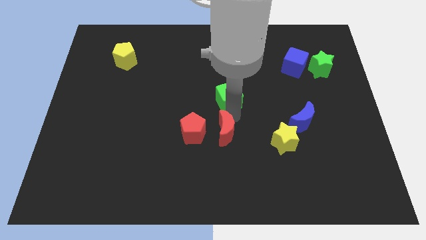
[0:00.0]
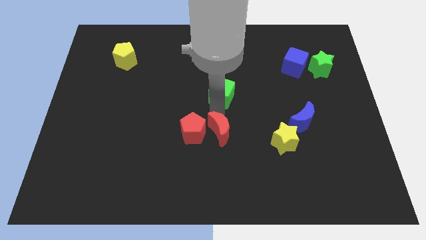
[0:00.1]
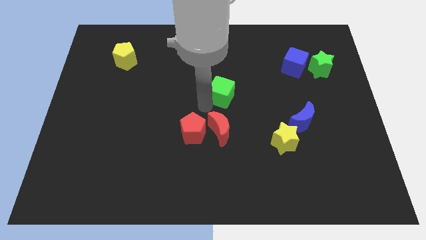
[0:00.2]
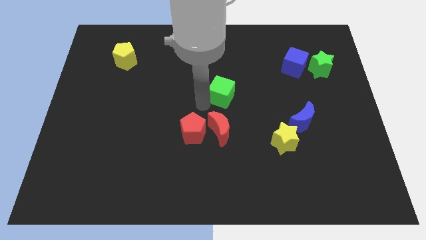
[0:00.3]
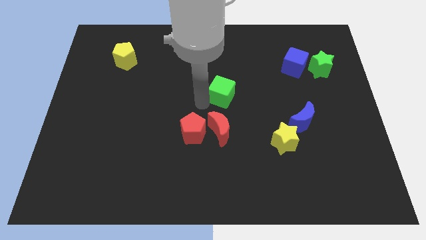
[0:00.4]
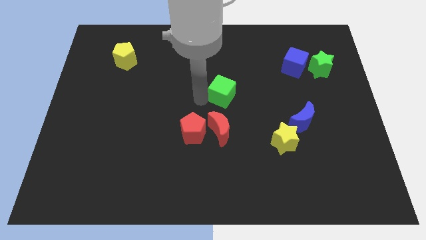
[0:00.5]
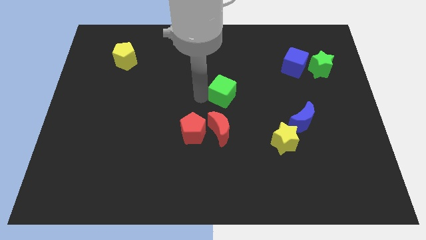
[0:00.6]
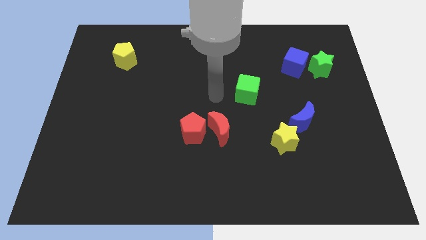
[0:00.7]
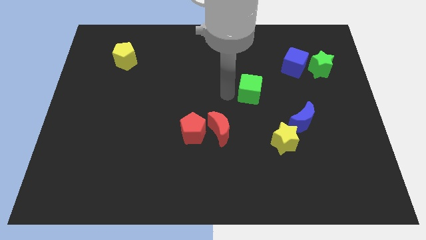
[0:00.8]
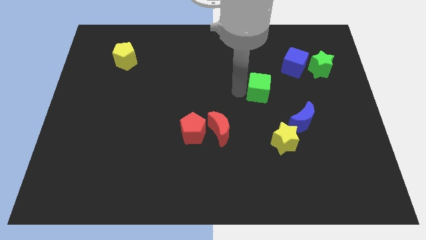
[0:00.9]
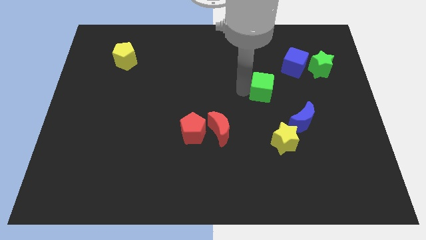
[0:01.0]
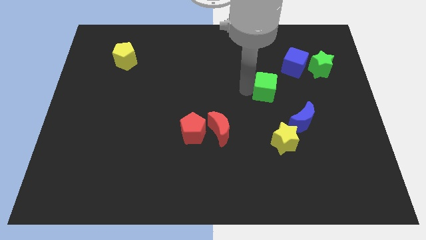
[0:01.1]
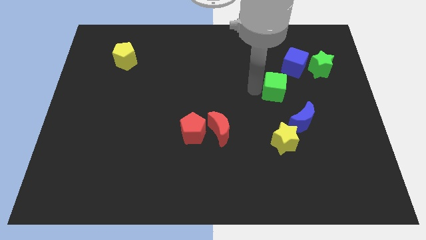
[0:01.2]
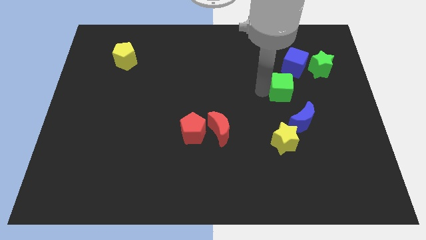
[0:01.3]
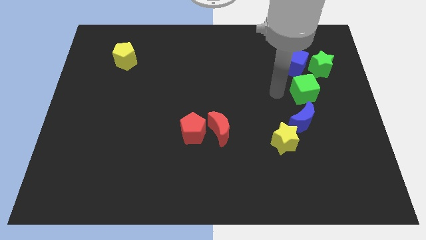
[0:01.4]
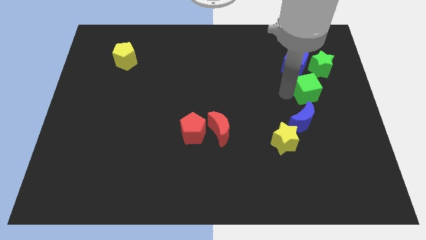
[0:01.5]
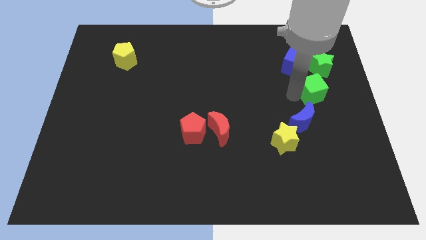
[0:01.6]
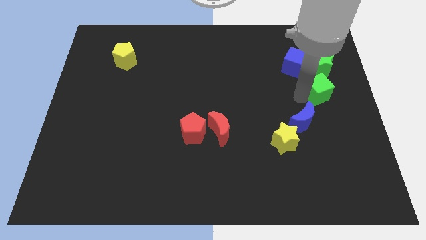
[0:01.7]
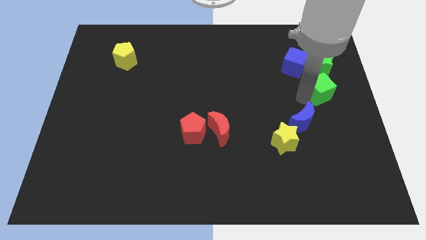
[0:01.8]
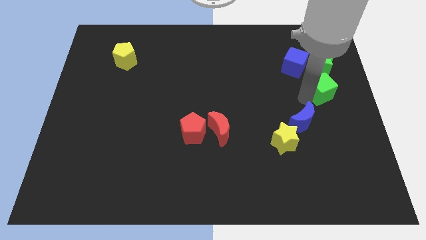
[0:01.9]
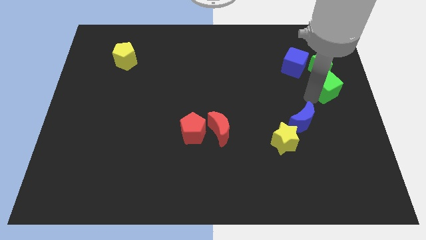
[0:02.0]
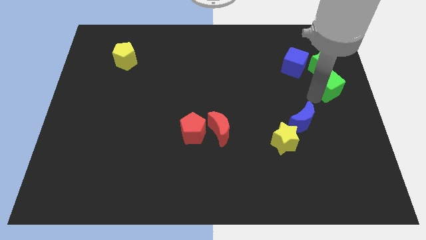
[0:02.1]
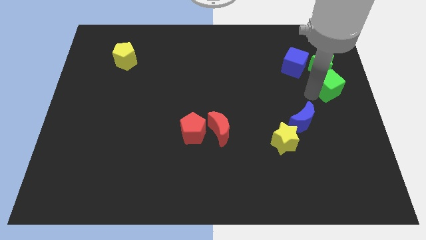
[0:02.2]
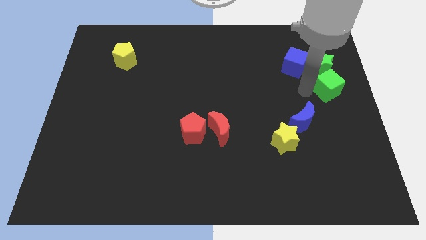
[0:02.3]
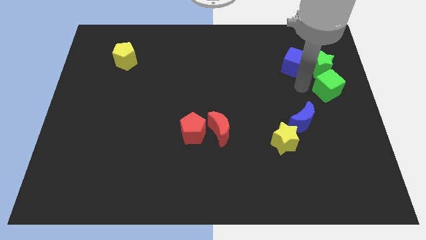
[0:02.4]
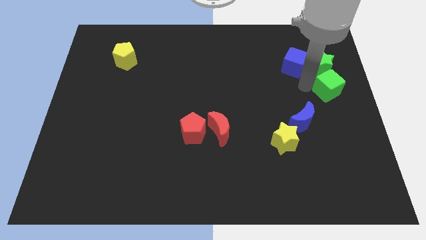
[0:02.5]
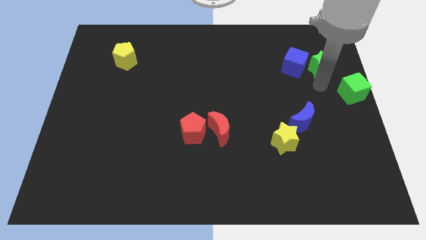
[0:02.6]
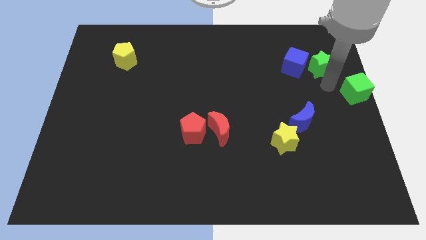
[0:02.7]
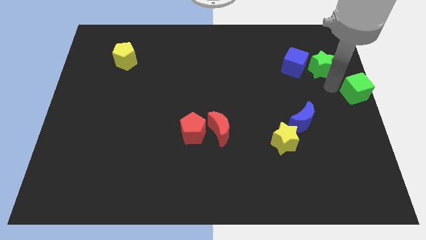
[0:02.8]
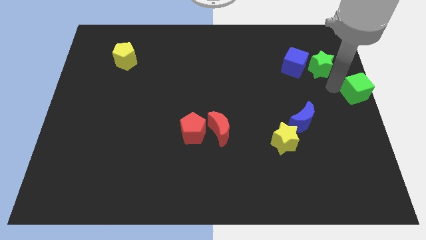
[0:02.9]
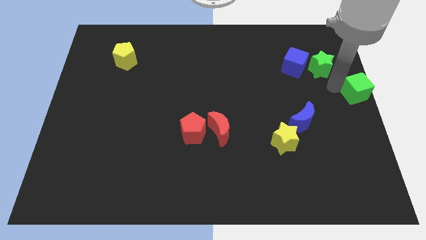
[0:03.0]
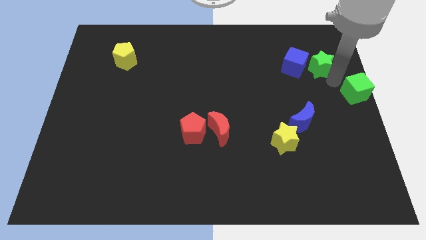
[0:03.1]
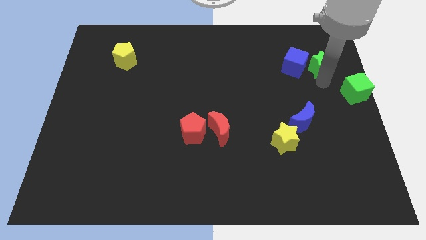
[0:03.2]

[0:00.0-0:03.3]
place the green cube to the right center of the board

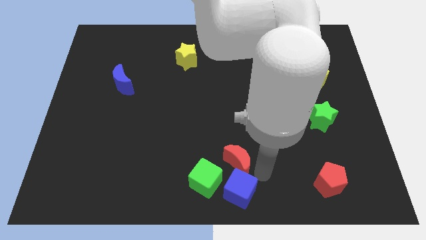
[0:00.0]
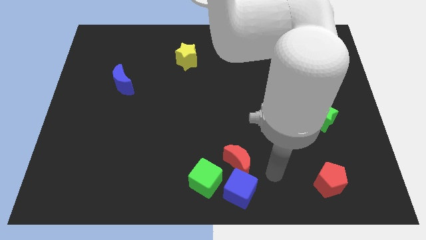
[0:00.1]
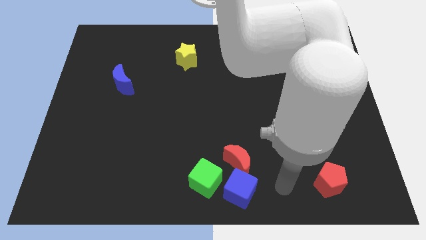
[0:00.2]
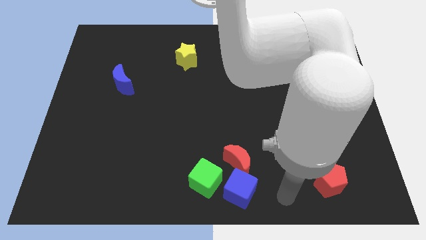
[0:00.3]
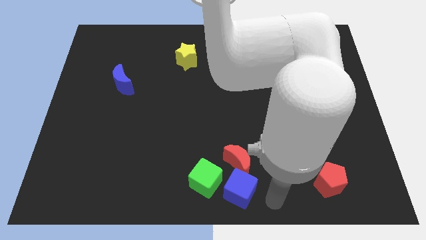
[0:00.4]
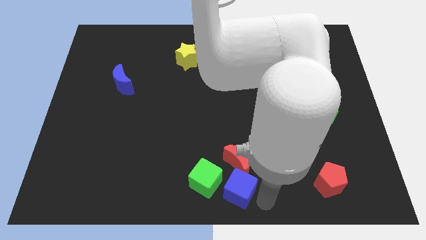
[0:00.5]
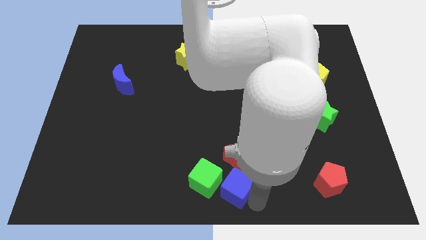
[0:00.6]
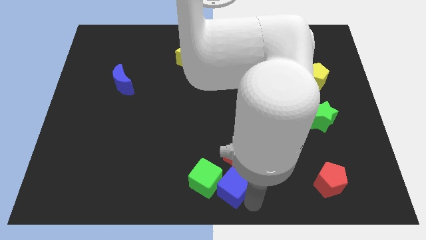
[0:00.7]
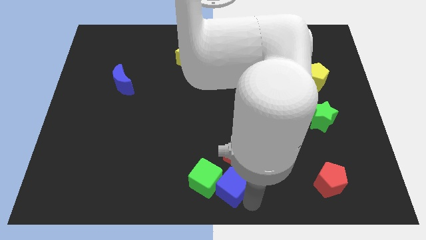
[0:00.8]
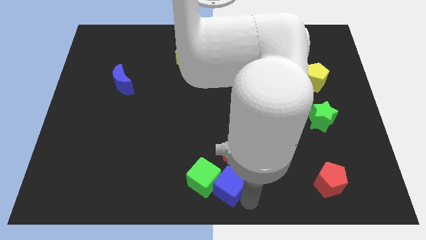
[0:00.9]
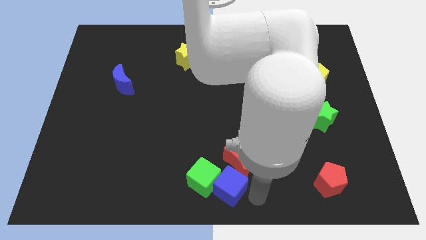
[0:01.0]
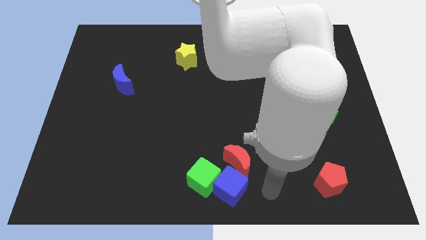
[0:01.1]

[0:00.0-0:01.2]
move the blue cube to the right of the green cube

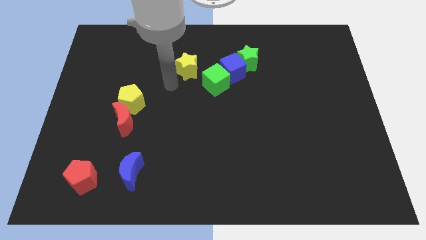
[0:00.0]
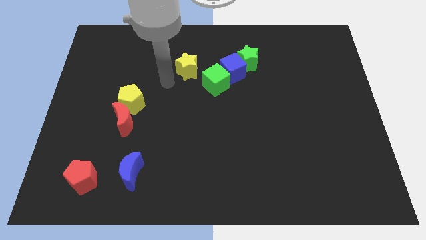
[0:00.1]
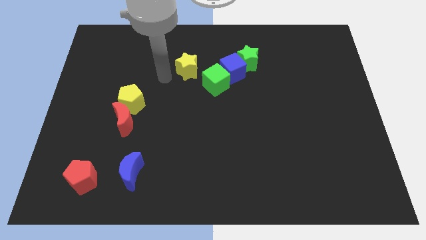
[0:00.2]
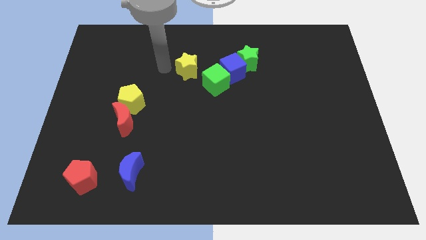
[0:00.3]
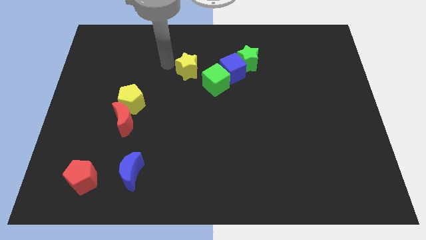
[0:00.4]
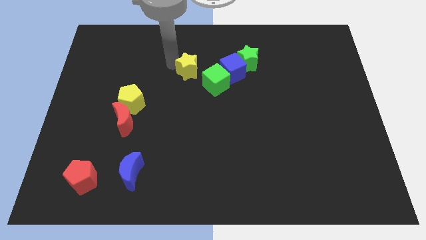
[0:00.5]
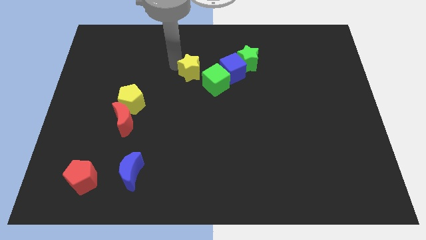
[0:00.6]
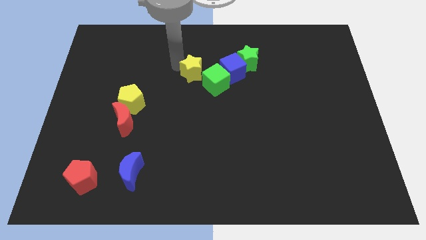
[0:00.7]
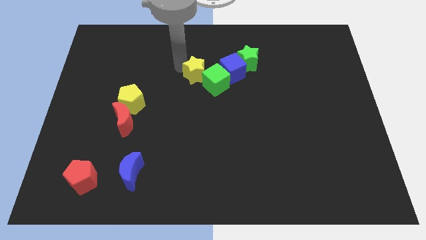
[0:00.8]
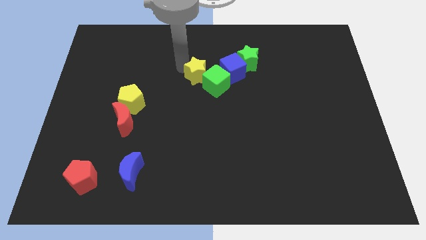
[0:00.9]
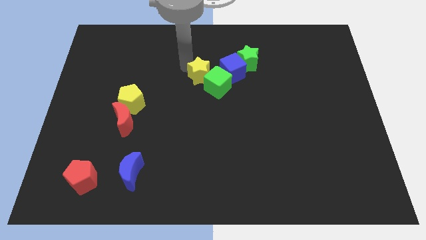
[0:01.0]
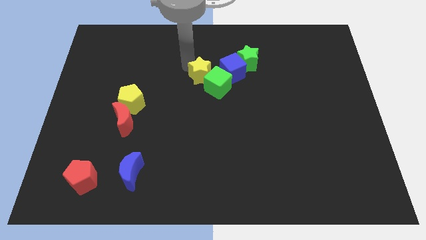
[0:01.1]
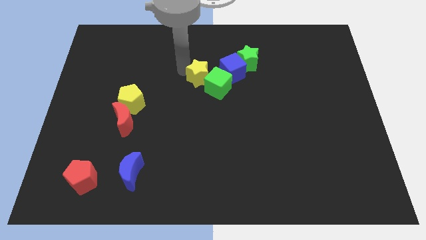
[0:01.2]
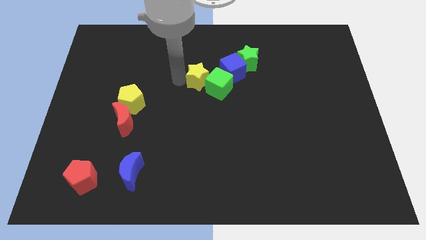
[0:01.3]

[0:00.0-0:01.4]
move yellow star into the green cube

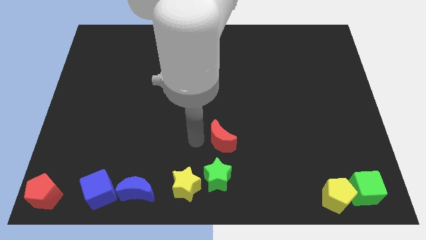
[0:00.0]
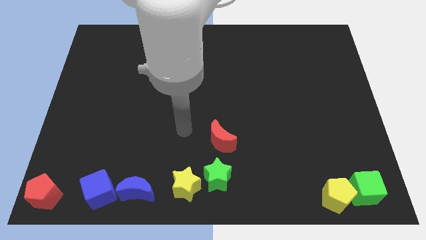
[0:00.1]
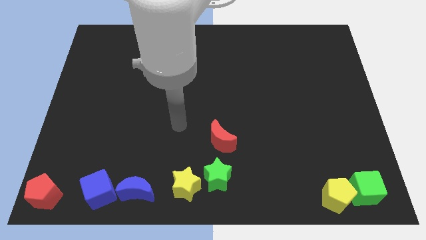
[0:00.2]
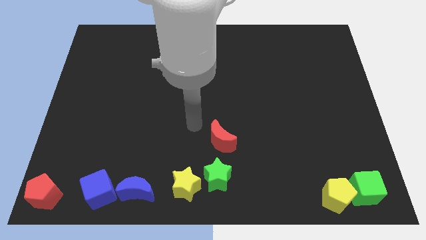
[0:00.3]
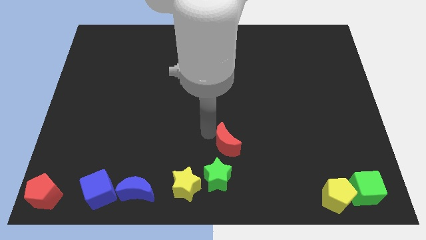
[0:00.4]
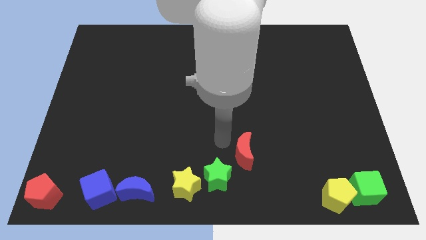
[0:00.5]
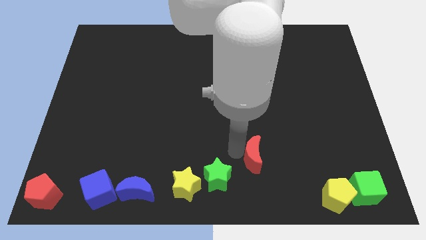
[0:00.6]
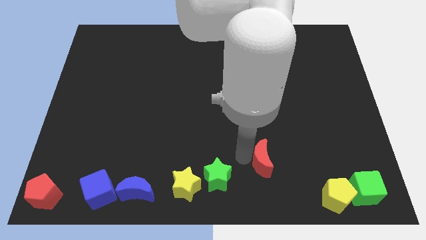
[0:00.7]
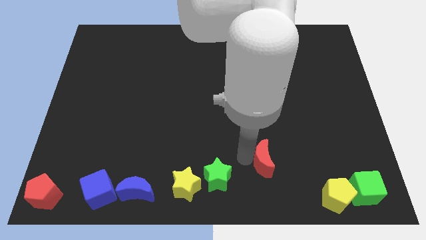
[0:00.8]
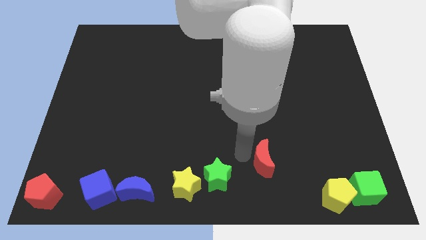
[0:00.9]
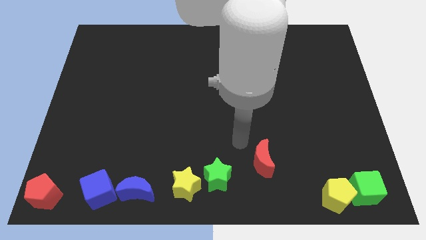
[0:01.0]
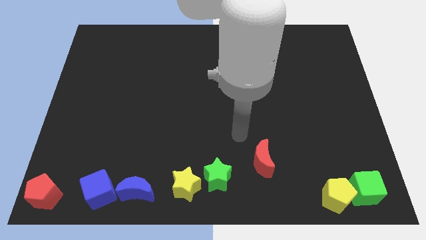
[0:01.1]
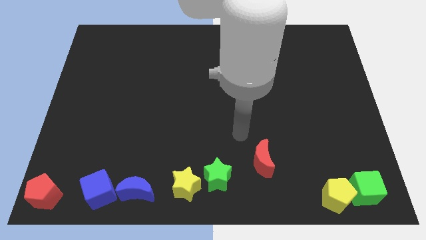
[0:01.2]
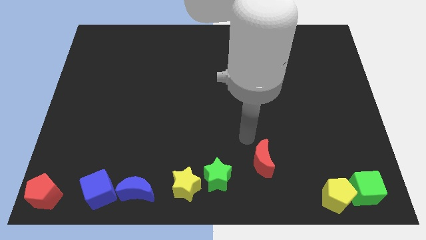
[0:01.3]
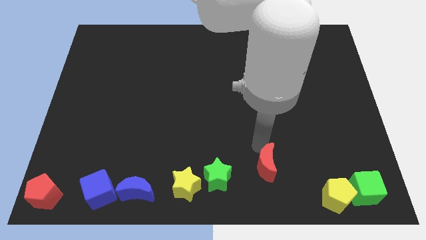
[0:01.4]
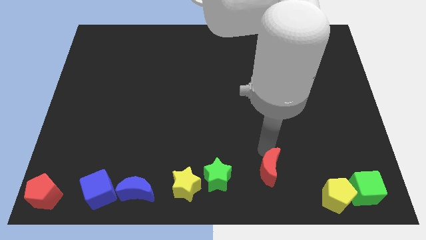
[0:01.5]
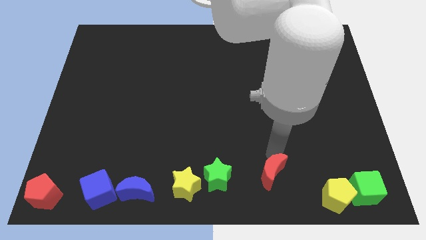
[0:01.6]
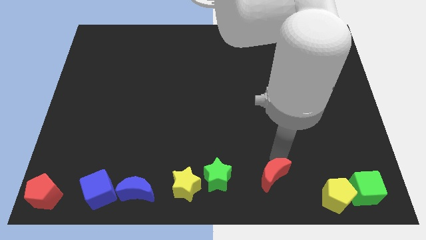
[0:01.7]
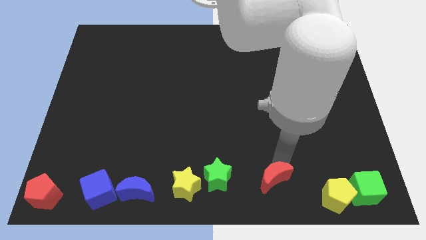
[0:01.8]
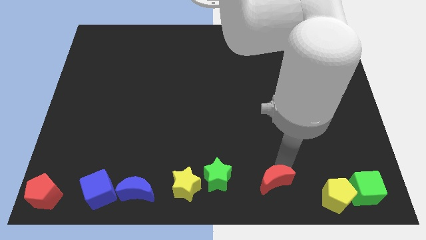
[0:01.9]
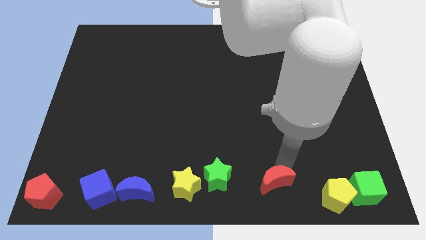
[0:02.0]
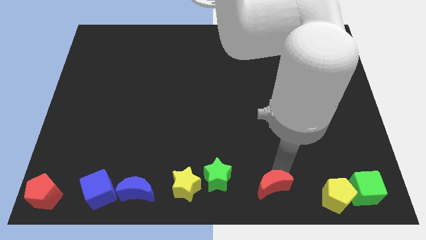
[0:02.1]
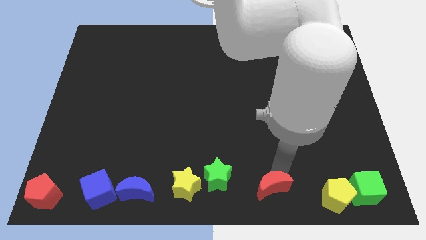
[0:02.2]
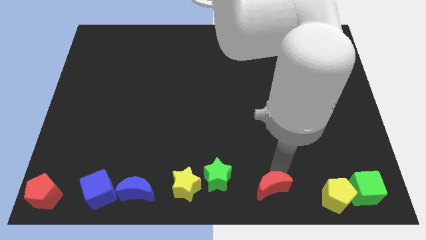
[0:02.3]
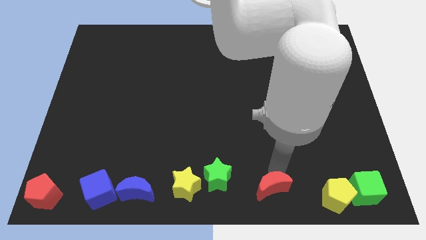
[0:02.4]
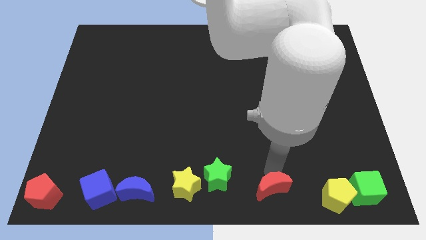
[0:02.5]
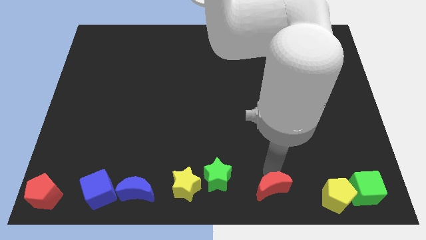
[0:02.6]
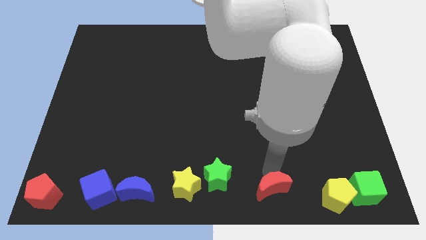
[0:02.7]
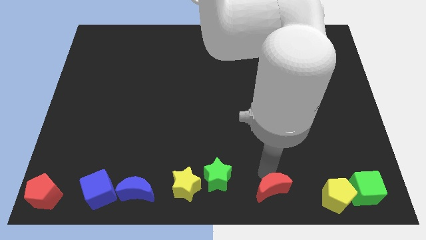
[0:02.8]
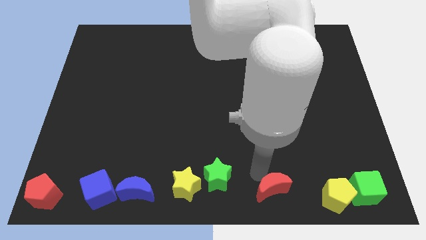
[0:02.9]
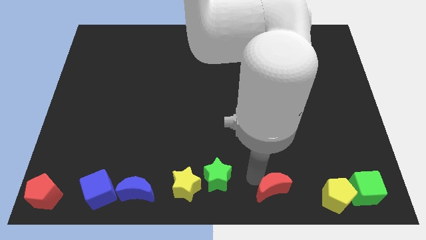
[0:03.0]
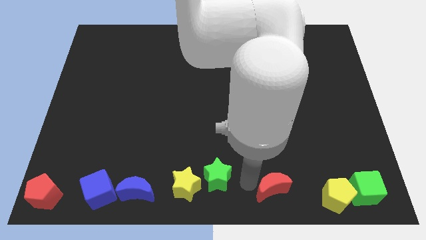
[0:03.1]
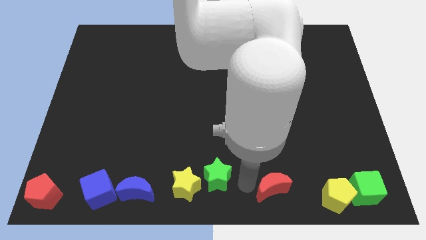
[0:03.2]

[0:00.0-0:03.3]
put the red crescent to the right of the green star
